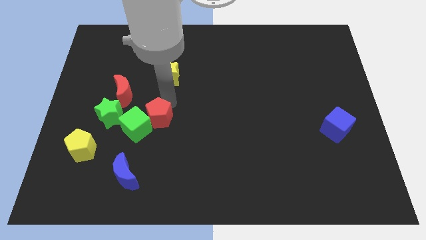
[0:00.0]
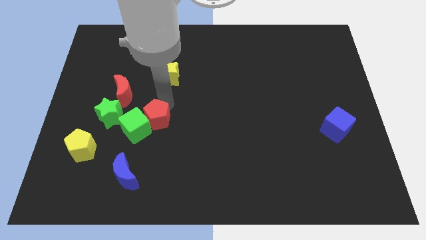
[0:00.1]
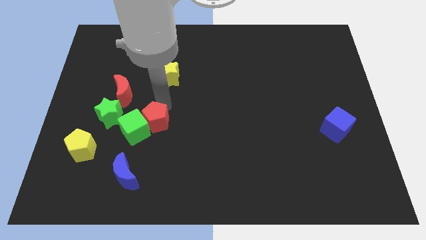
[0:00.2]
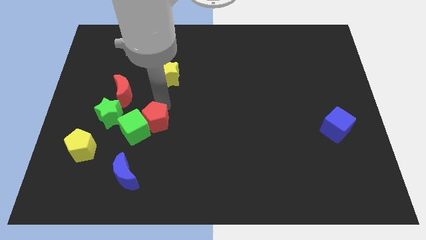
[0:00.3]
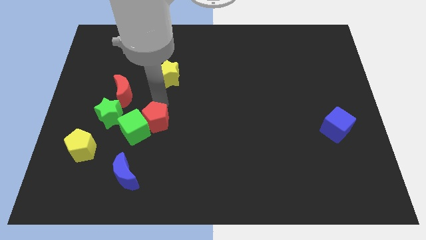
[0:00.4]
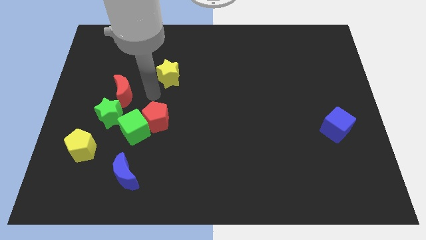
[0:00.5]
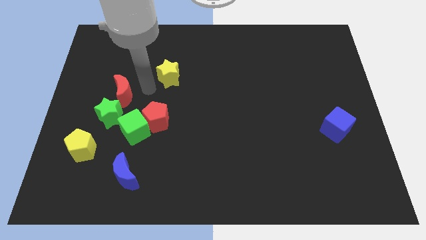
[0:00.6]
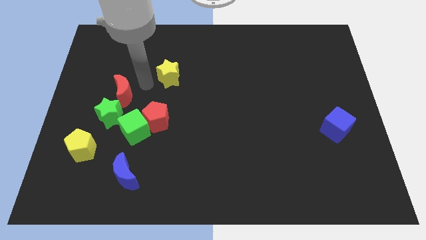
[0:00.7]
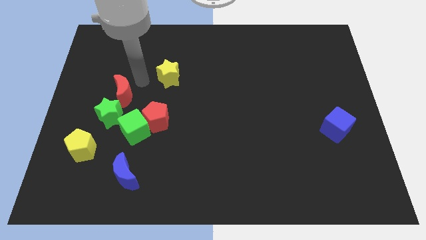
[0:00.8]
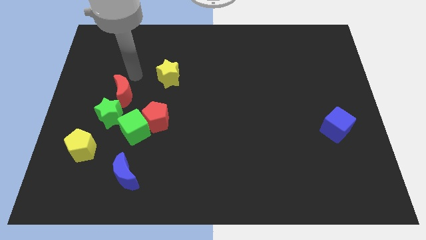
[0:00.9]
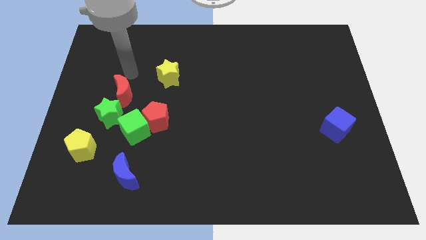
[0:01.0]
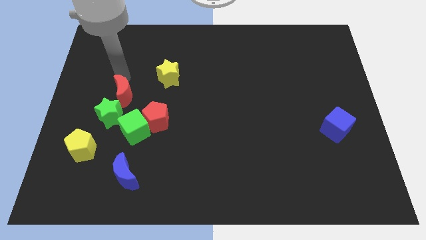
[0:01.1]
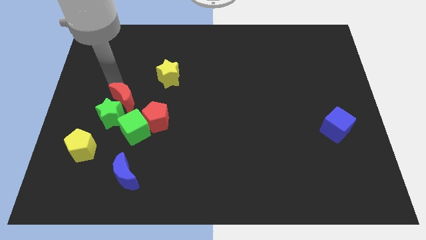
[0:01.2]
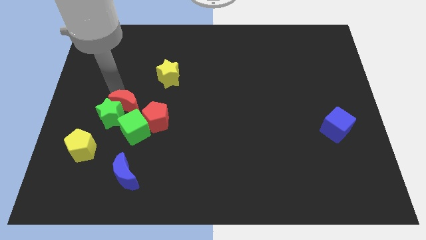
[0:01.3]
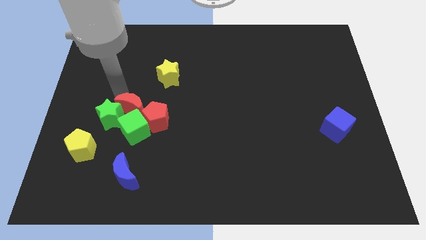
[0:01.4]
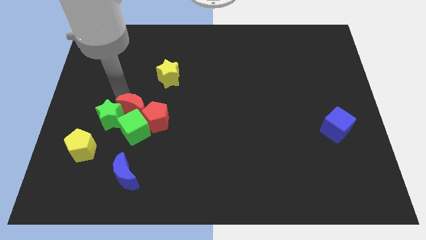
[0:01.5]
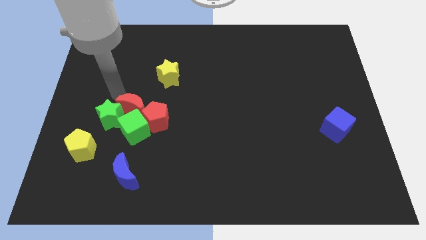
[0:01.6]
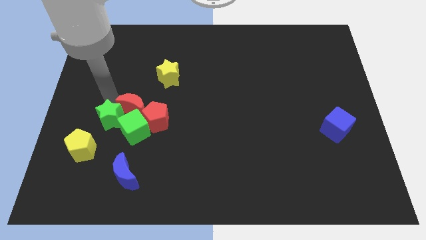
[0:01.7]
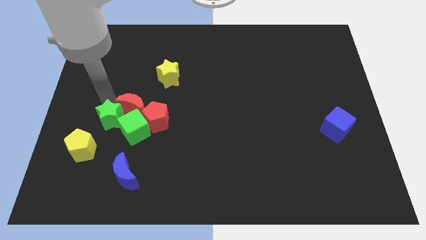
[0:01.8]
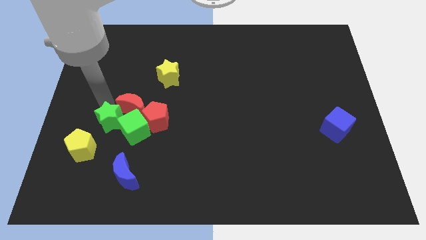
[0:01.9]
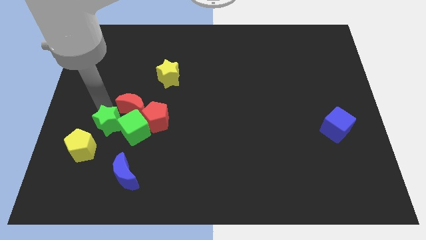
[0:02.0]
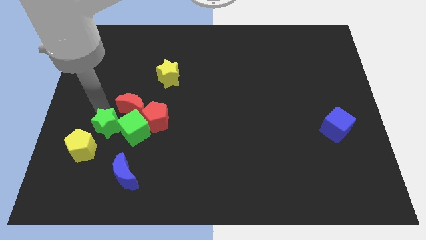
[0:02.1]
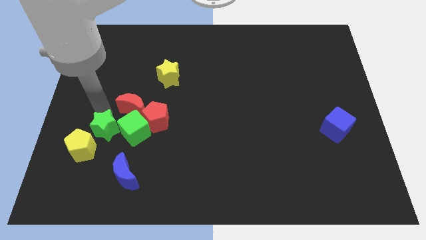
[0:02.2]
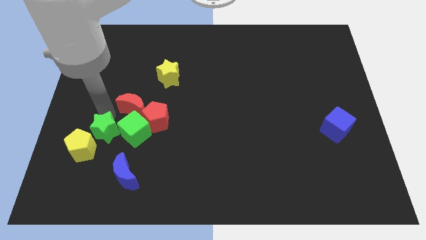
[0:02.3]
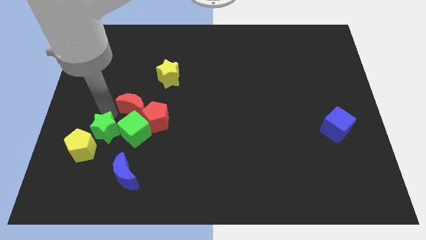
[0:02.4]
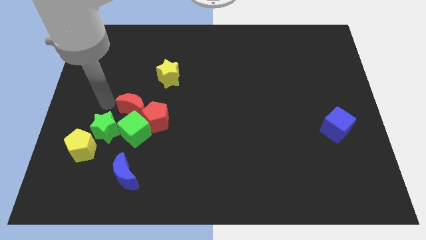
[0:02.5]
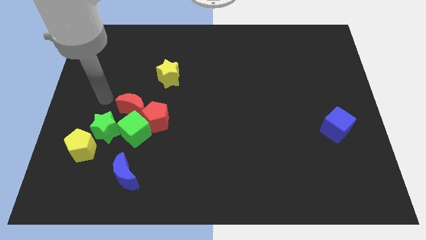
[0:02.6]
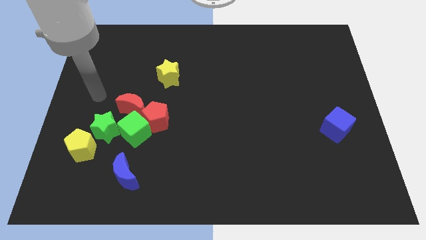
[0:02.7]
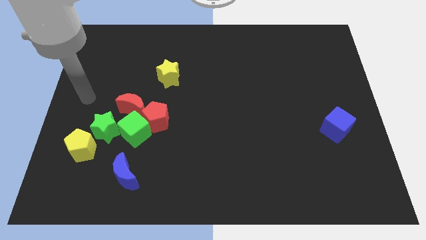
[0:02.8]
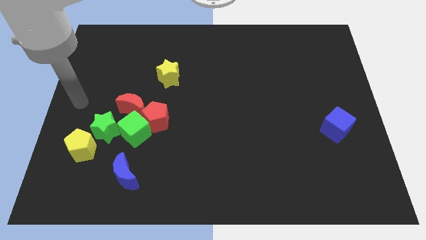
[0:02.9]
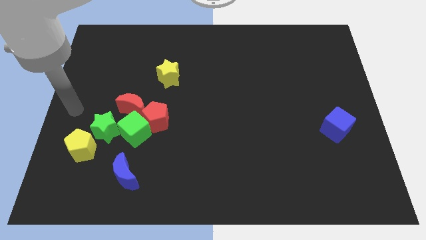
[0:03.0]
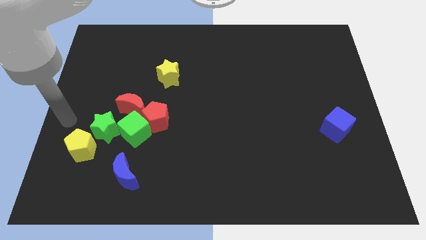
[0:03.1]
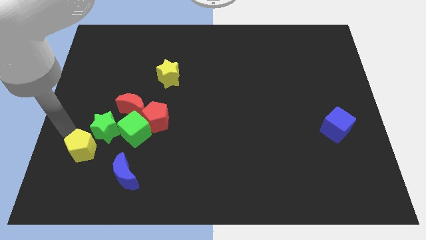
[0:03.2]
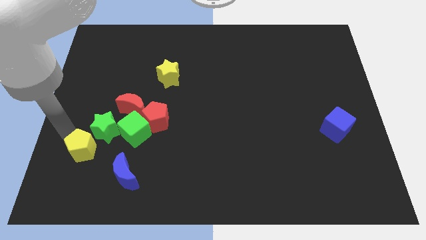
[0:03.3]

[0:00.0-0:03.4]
separate the green star from the red moon

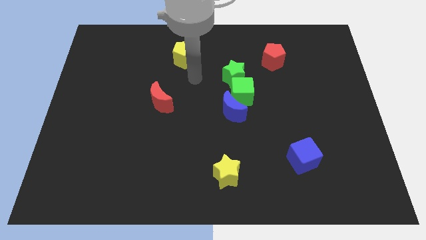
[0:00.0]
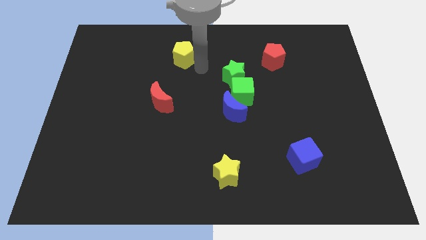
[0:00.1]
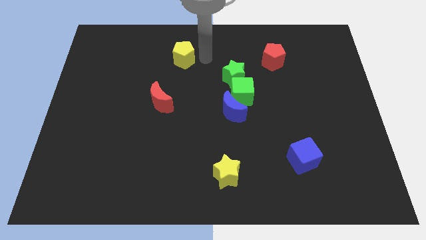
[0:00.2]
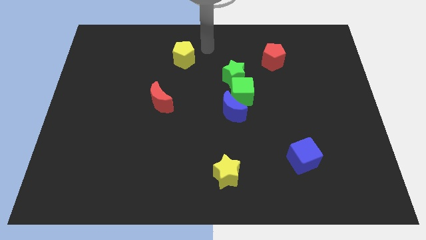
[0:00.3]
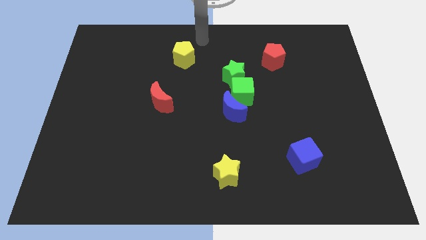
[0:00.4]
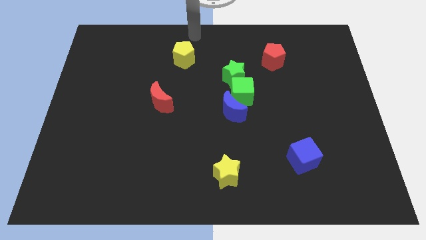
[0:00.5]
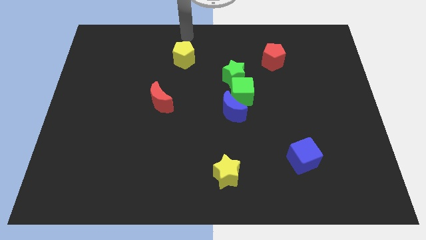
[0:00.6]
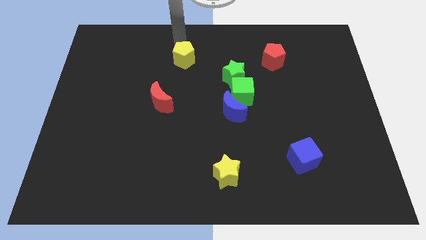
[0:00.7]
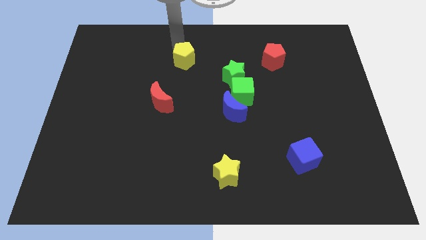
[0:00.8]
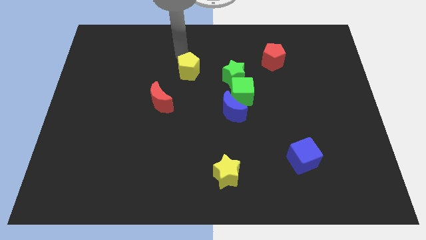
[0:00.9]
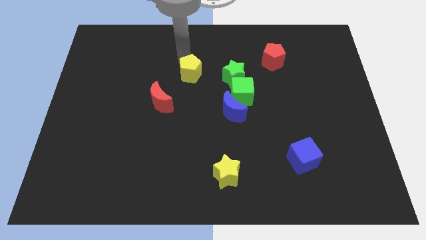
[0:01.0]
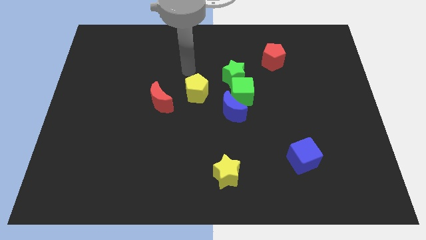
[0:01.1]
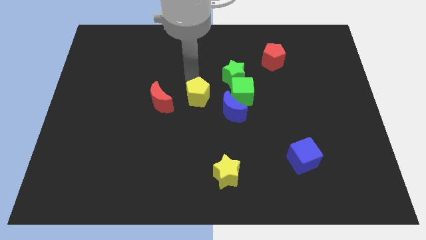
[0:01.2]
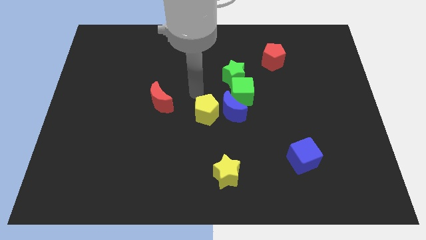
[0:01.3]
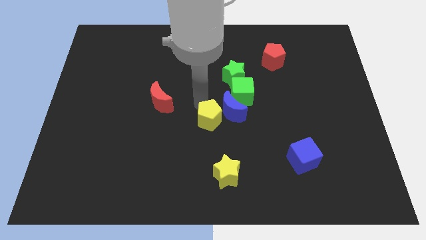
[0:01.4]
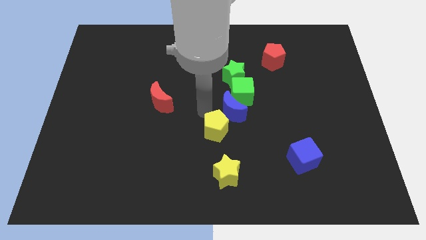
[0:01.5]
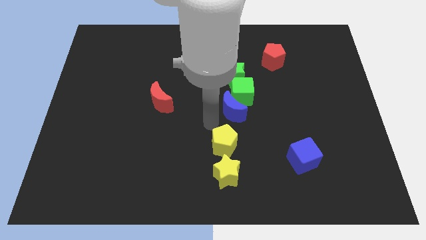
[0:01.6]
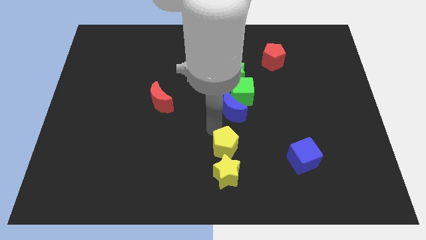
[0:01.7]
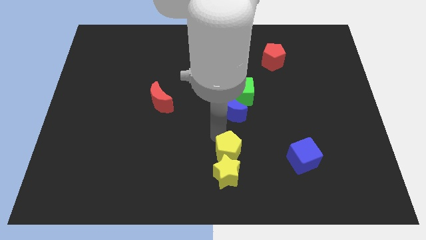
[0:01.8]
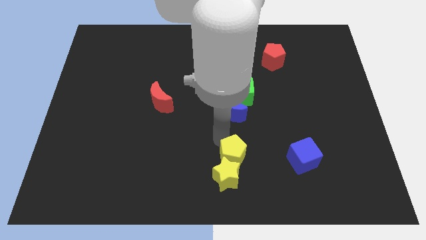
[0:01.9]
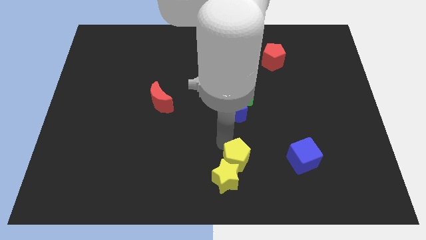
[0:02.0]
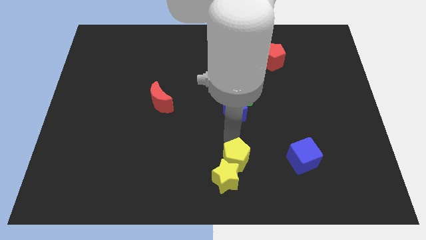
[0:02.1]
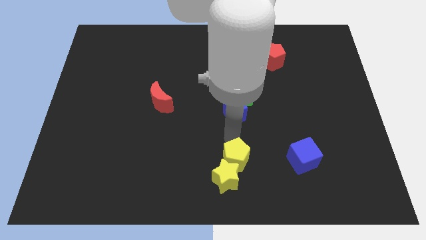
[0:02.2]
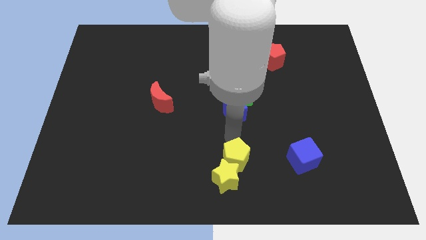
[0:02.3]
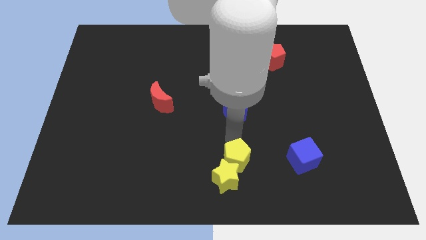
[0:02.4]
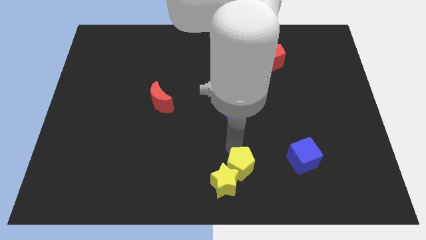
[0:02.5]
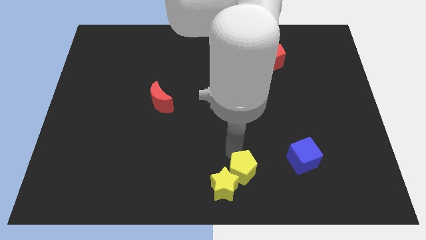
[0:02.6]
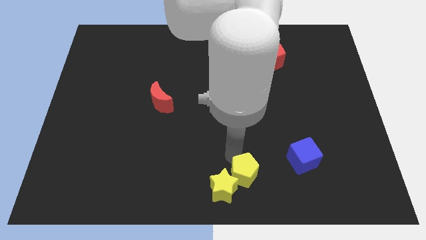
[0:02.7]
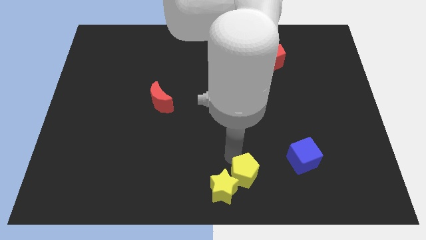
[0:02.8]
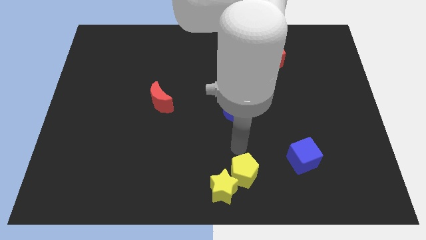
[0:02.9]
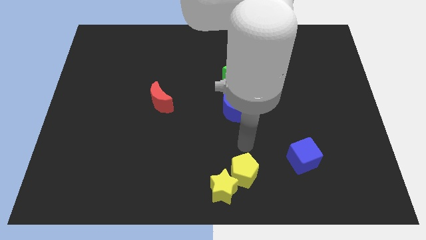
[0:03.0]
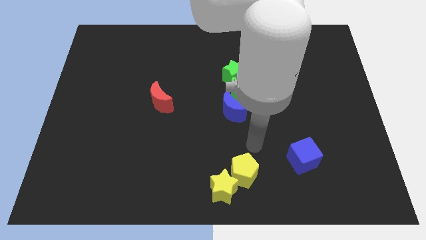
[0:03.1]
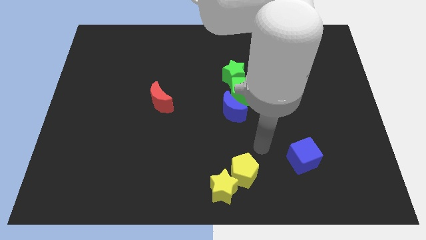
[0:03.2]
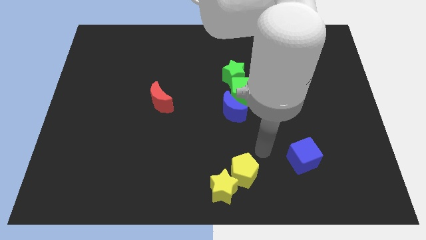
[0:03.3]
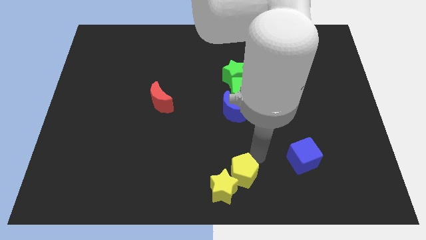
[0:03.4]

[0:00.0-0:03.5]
push yellow star with yellow pentagon

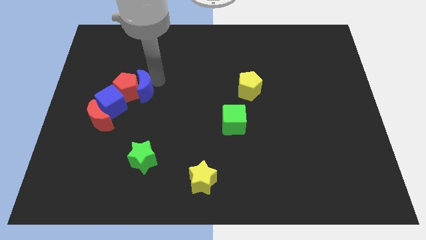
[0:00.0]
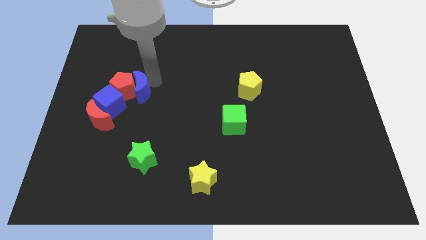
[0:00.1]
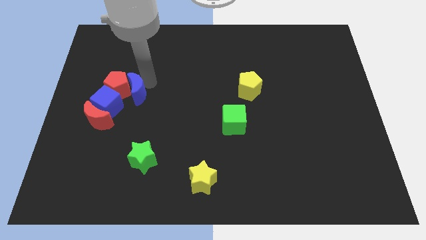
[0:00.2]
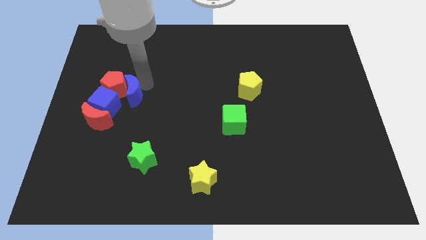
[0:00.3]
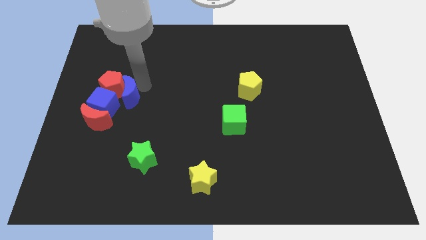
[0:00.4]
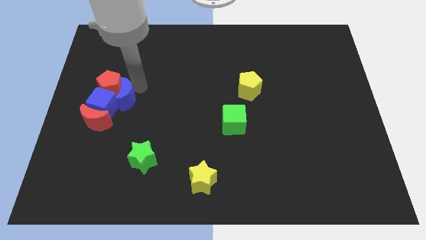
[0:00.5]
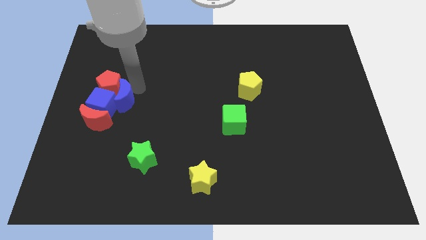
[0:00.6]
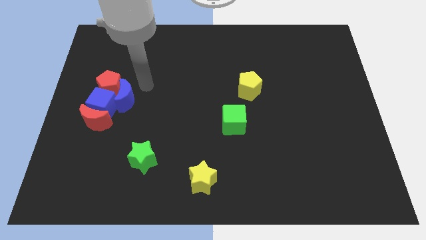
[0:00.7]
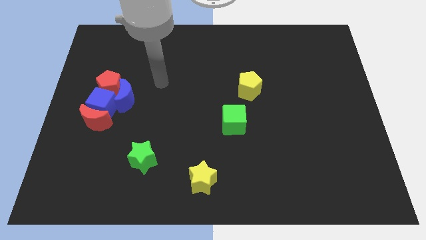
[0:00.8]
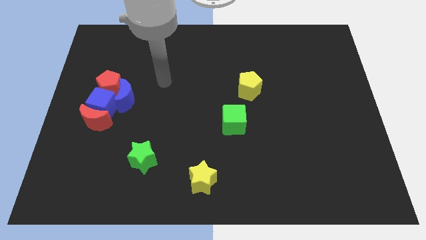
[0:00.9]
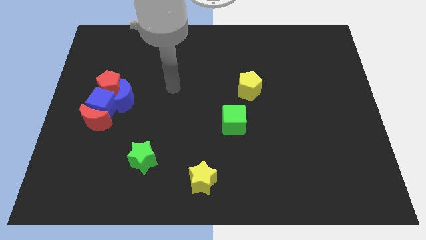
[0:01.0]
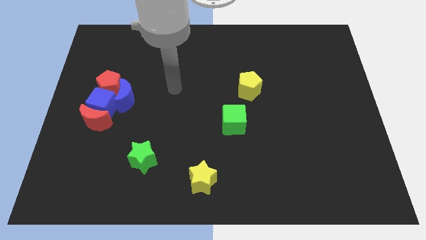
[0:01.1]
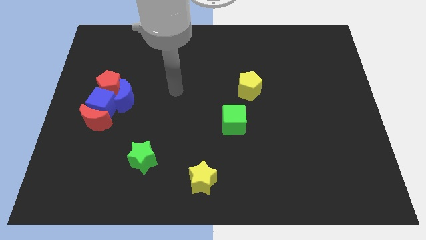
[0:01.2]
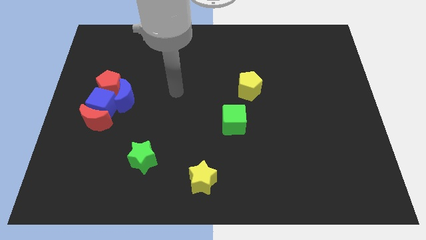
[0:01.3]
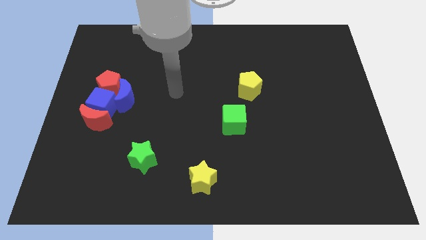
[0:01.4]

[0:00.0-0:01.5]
move the blue crescent to the right of the blue cube

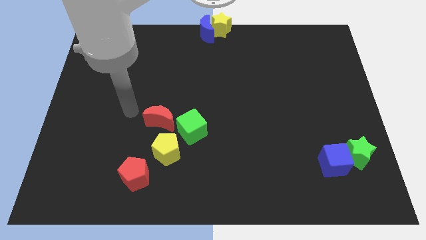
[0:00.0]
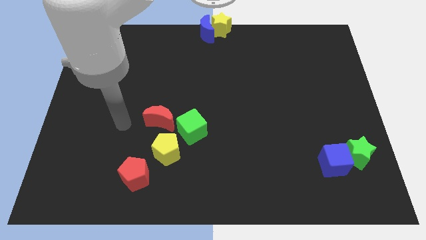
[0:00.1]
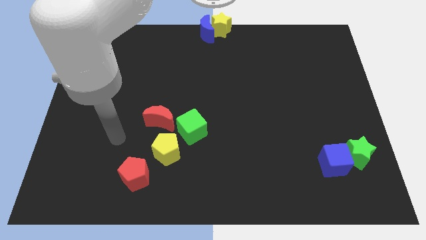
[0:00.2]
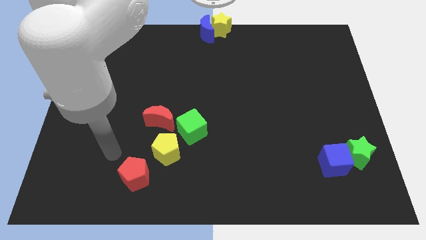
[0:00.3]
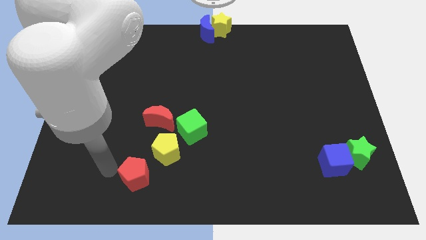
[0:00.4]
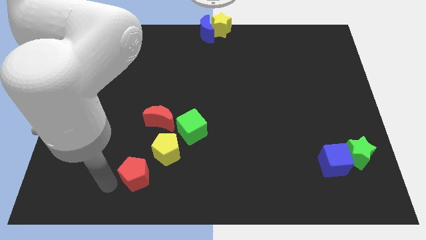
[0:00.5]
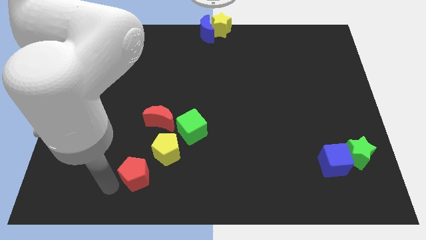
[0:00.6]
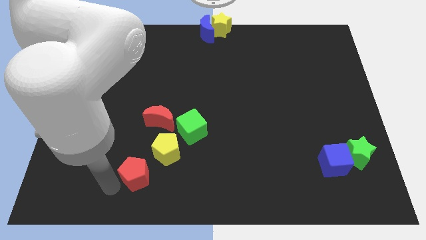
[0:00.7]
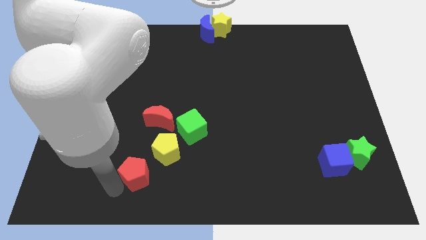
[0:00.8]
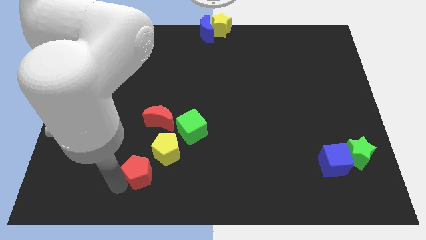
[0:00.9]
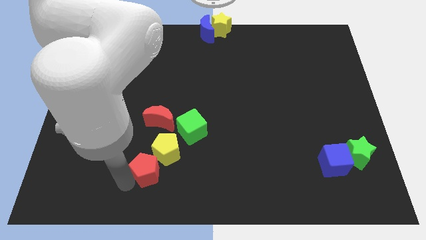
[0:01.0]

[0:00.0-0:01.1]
tap the left side of red pentagon
